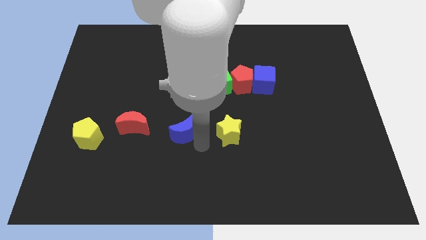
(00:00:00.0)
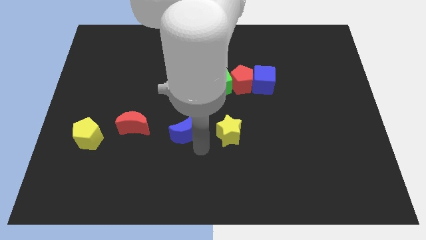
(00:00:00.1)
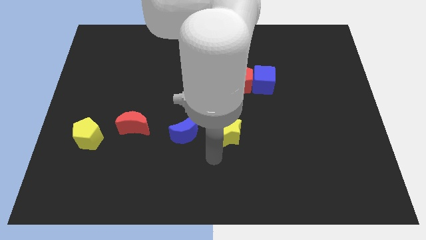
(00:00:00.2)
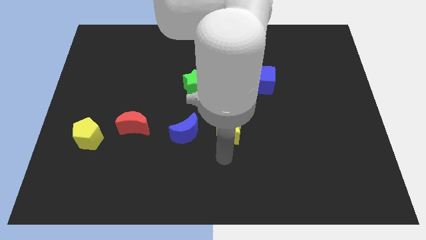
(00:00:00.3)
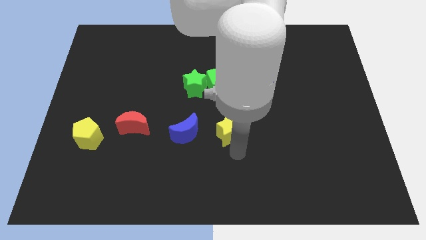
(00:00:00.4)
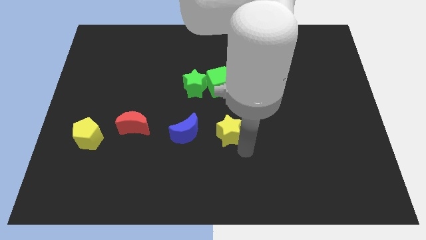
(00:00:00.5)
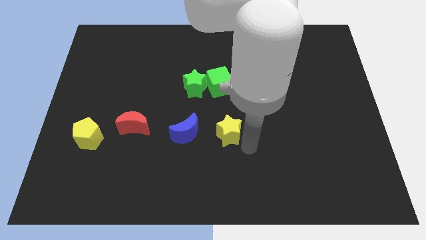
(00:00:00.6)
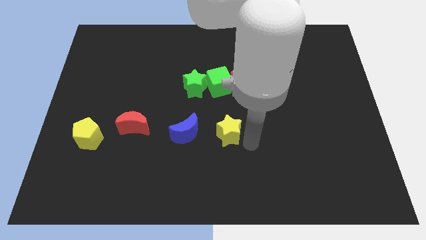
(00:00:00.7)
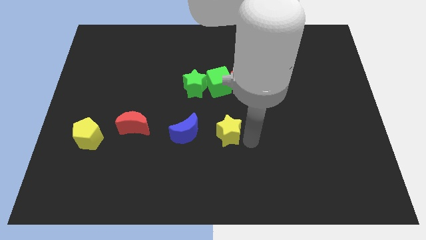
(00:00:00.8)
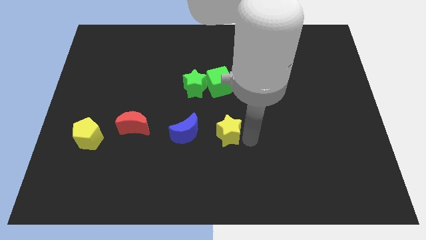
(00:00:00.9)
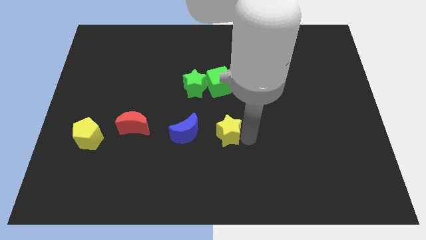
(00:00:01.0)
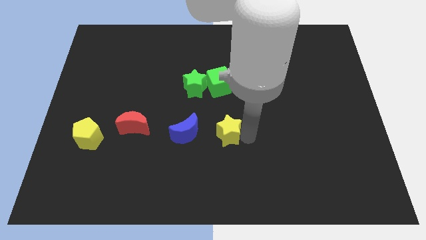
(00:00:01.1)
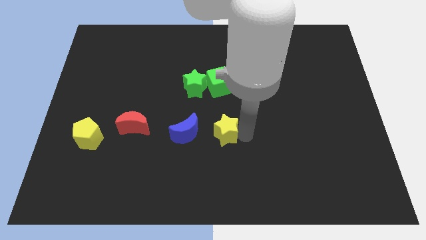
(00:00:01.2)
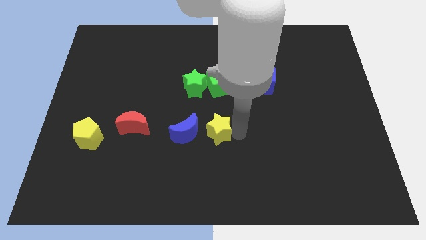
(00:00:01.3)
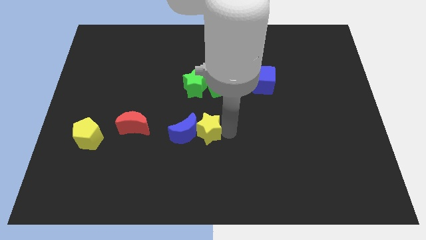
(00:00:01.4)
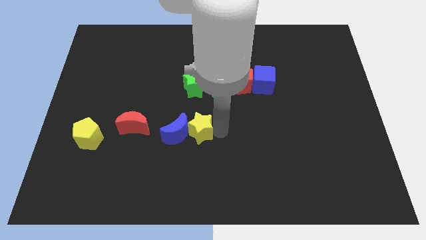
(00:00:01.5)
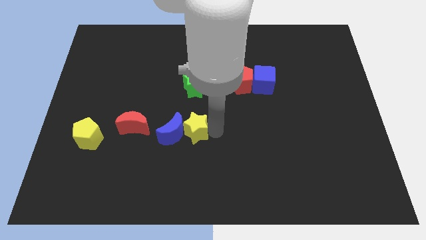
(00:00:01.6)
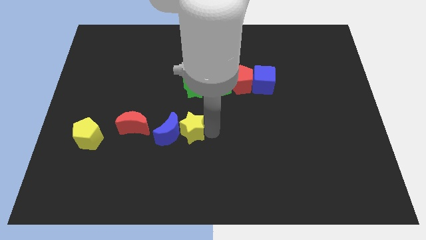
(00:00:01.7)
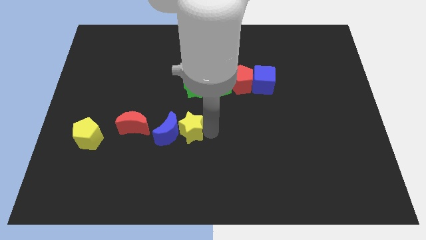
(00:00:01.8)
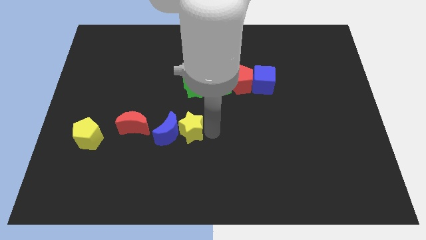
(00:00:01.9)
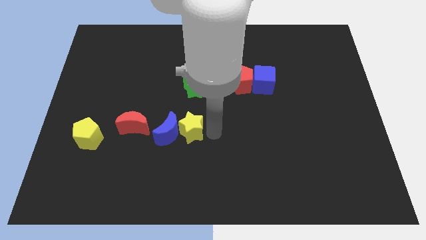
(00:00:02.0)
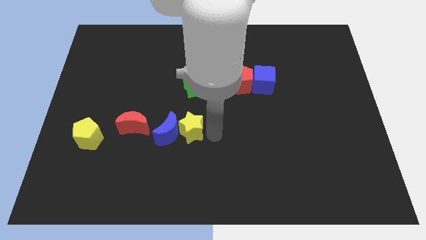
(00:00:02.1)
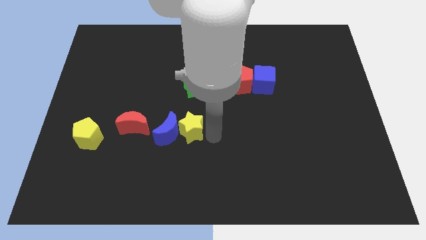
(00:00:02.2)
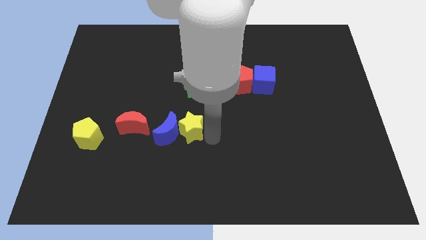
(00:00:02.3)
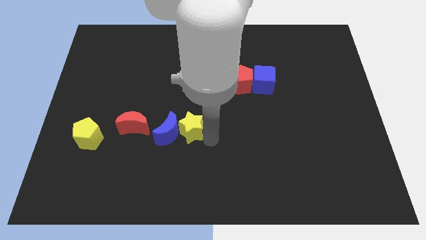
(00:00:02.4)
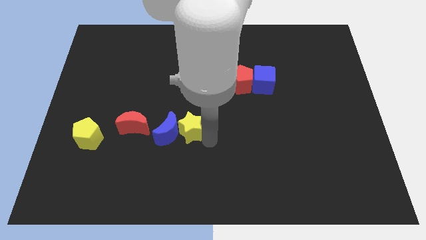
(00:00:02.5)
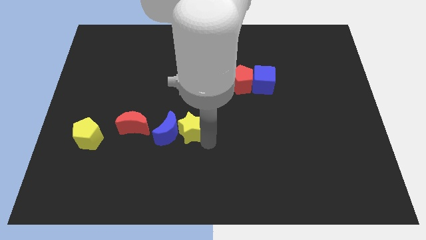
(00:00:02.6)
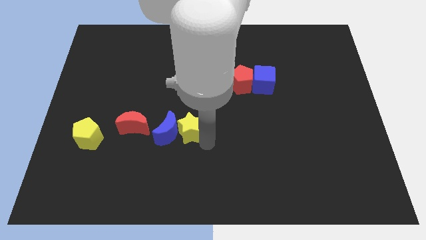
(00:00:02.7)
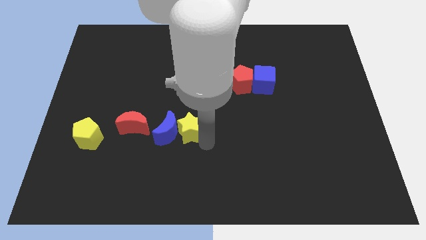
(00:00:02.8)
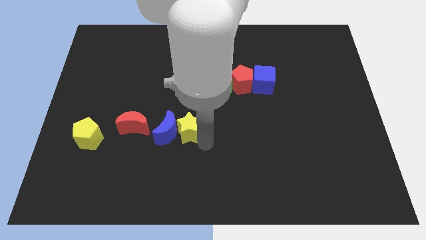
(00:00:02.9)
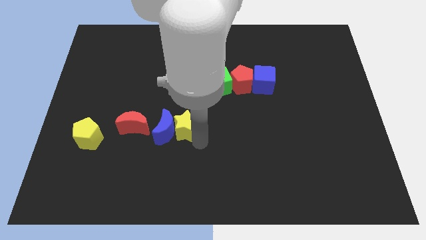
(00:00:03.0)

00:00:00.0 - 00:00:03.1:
push yellow star into blue moon

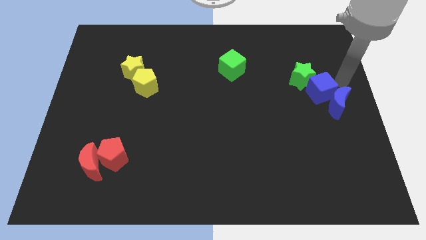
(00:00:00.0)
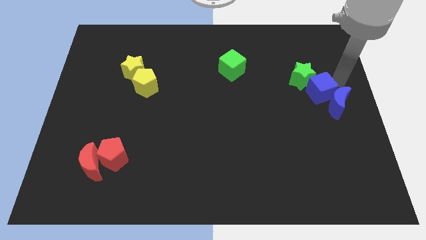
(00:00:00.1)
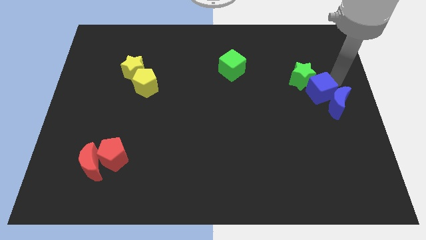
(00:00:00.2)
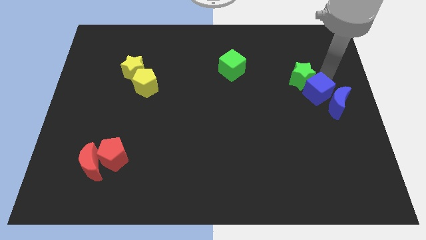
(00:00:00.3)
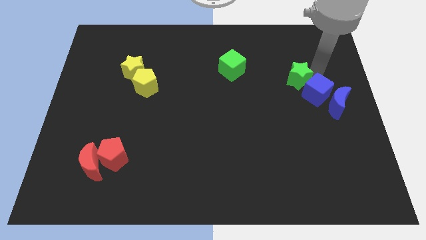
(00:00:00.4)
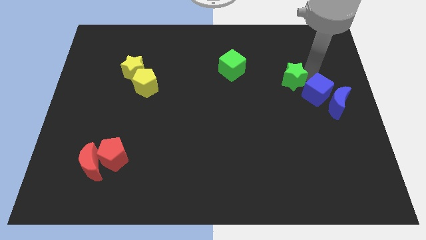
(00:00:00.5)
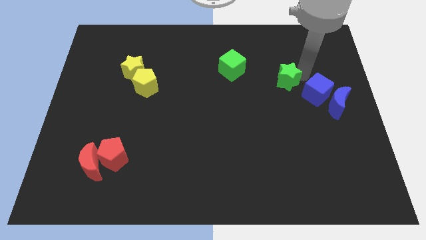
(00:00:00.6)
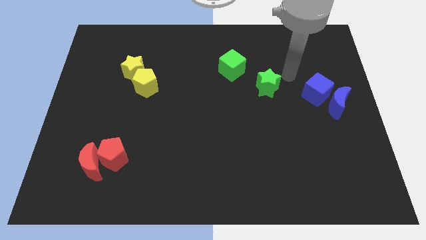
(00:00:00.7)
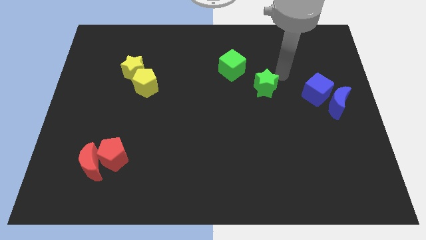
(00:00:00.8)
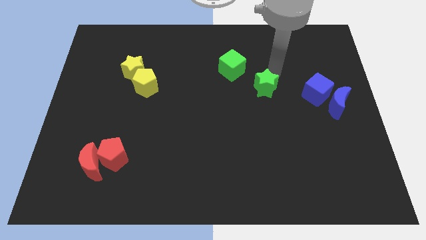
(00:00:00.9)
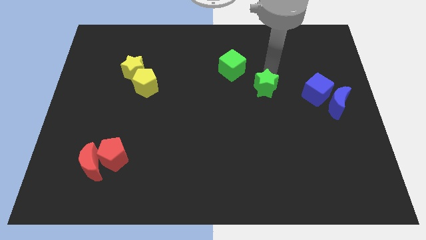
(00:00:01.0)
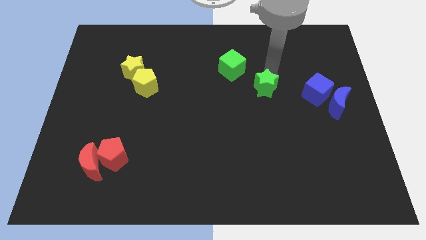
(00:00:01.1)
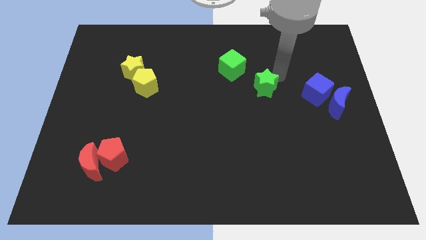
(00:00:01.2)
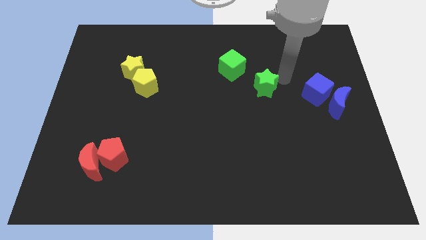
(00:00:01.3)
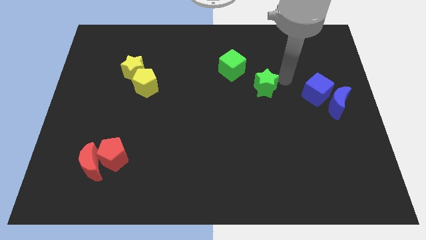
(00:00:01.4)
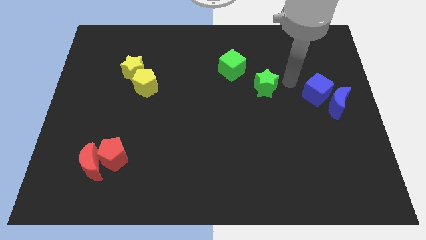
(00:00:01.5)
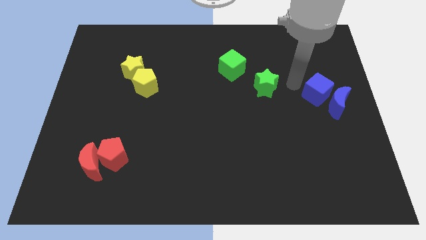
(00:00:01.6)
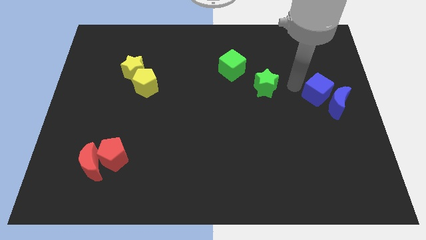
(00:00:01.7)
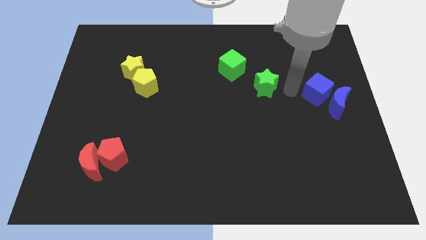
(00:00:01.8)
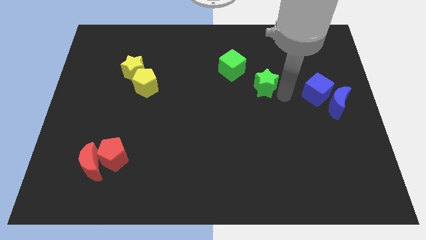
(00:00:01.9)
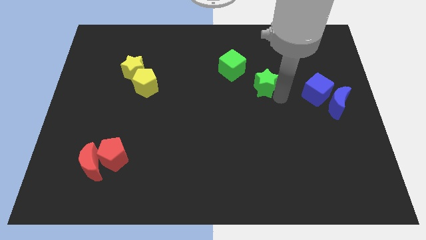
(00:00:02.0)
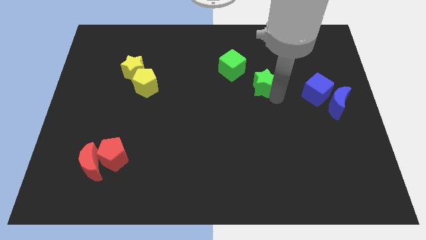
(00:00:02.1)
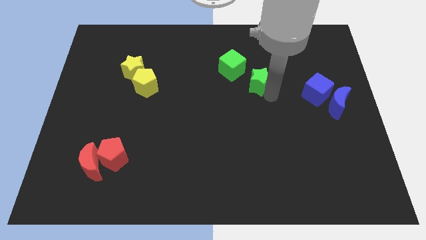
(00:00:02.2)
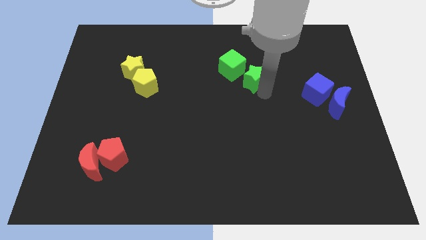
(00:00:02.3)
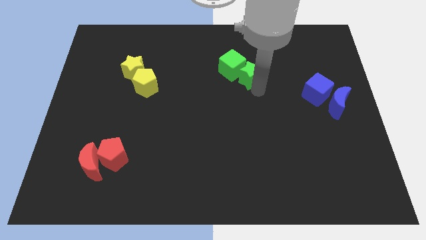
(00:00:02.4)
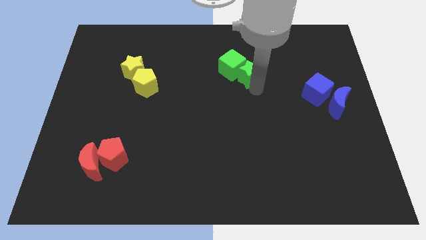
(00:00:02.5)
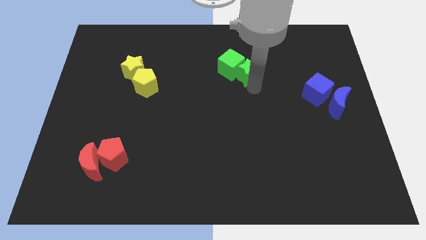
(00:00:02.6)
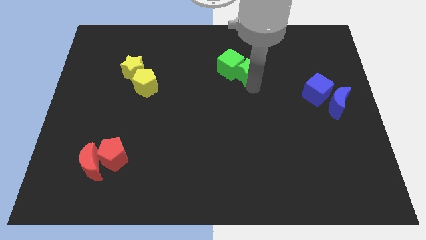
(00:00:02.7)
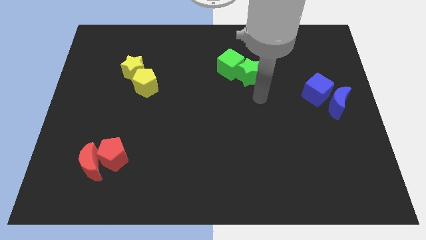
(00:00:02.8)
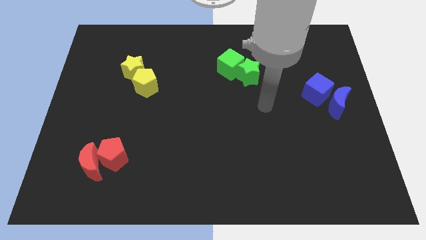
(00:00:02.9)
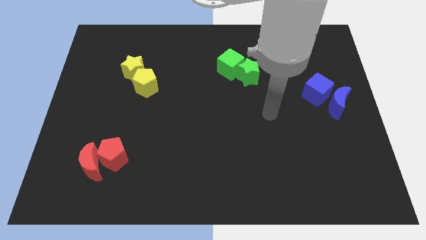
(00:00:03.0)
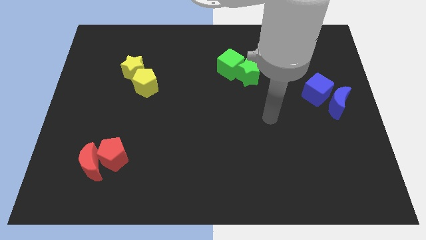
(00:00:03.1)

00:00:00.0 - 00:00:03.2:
push the green star into the green cube

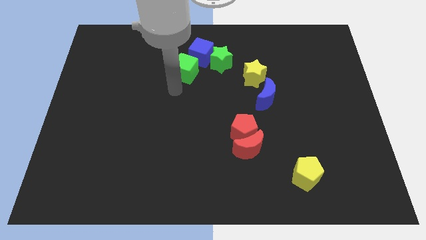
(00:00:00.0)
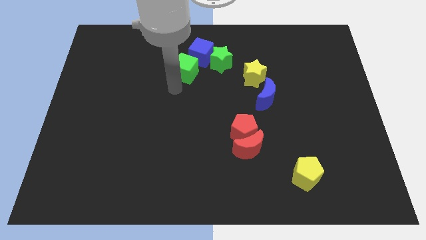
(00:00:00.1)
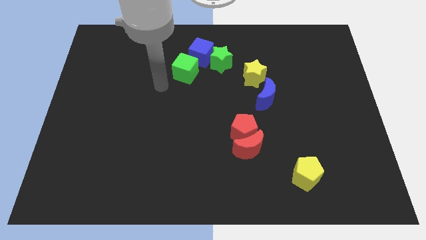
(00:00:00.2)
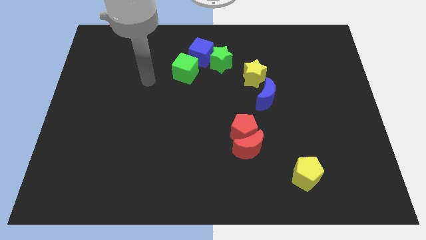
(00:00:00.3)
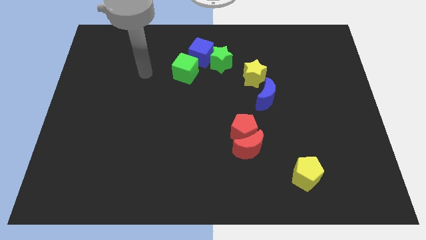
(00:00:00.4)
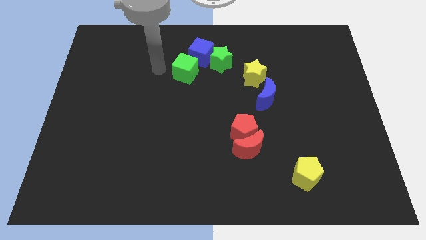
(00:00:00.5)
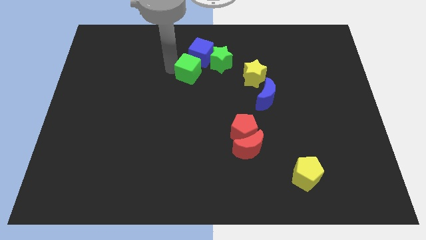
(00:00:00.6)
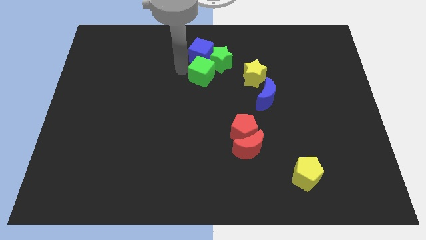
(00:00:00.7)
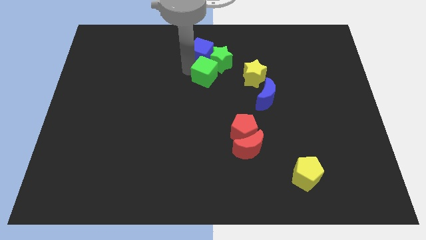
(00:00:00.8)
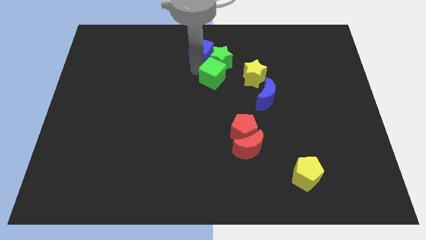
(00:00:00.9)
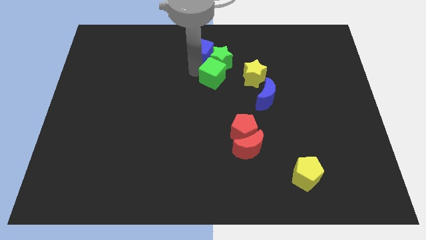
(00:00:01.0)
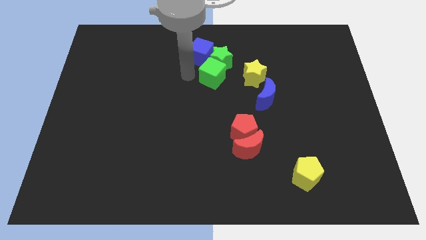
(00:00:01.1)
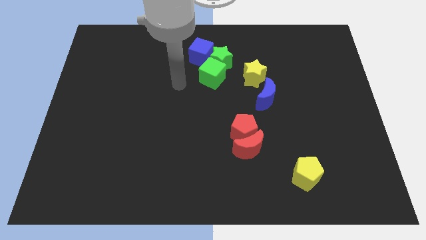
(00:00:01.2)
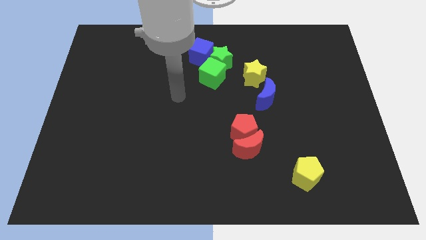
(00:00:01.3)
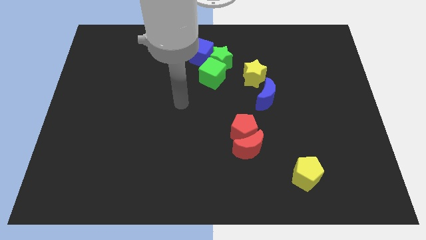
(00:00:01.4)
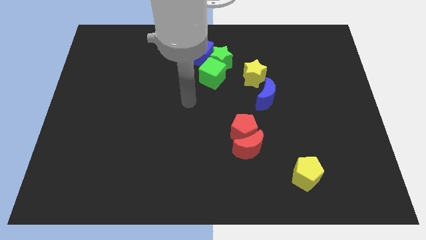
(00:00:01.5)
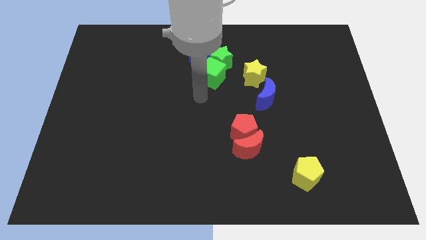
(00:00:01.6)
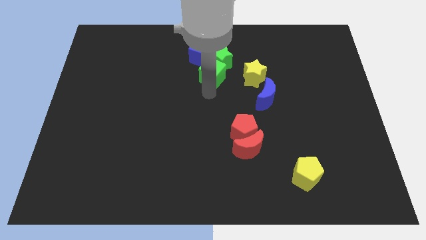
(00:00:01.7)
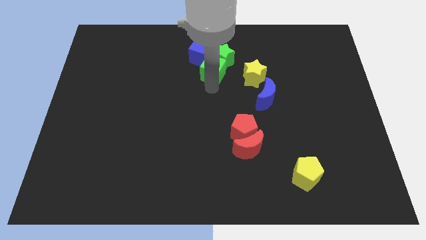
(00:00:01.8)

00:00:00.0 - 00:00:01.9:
put the green blocks together

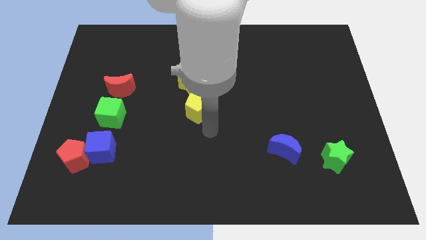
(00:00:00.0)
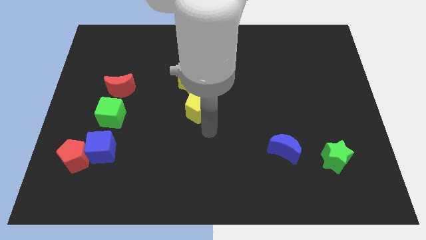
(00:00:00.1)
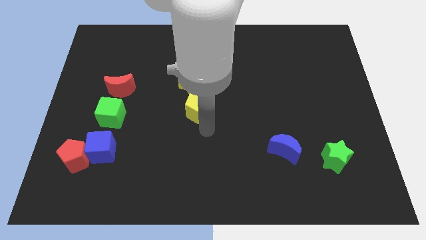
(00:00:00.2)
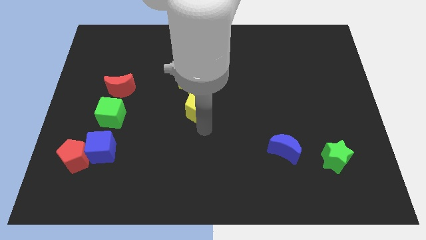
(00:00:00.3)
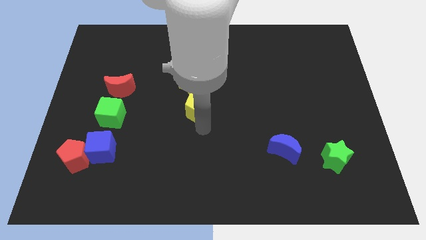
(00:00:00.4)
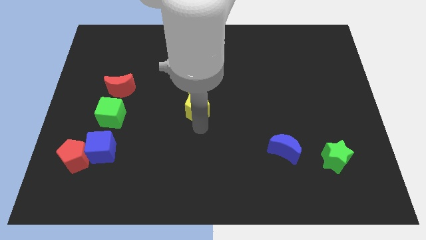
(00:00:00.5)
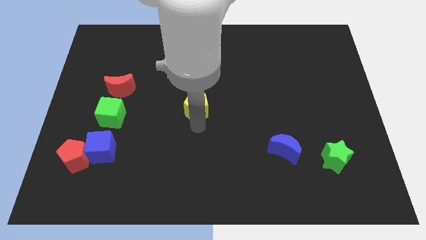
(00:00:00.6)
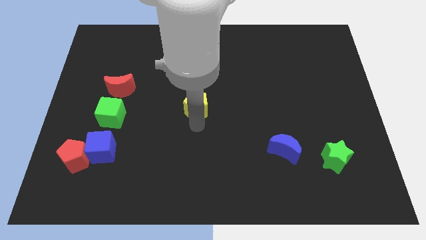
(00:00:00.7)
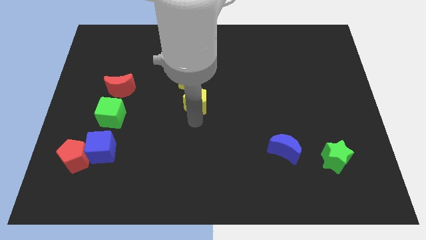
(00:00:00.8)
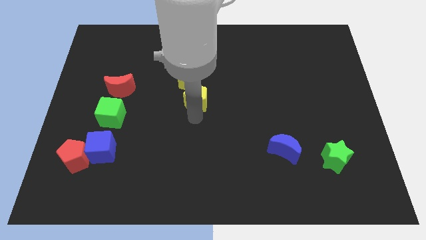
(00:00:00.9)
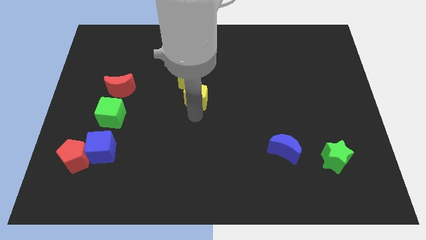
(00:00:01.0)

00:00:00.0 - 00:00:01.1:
move yellow pentagon towards yellow star
